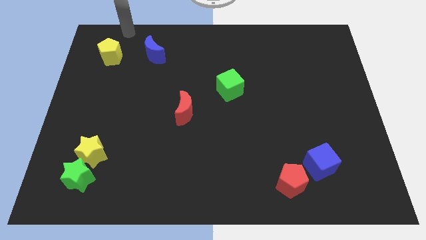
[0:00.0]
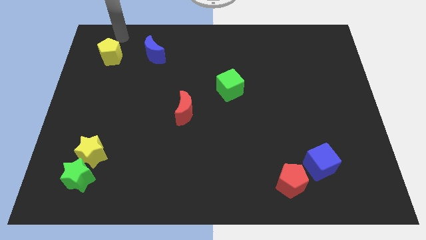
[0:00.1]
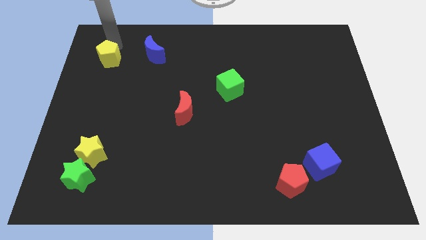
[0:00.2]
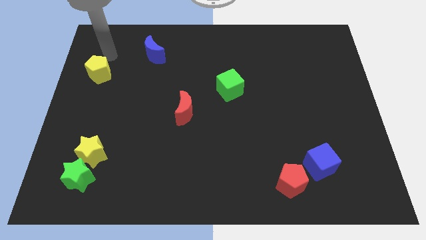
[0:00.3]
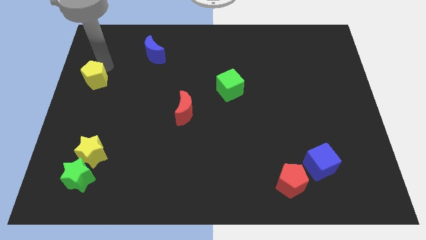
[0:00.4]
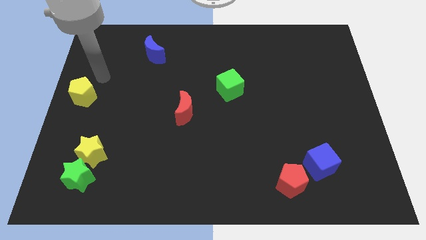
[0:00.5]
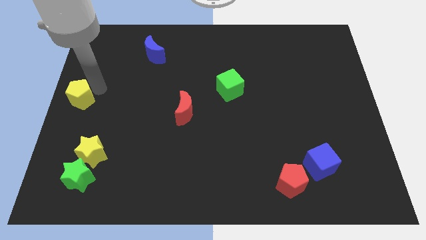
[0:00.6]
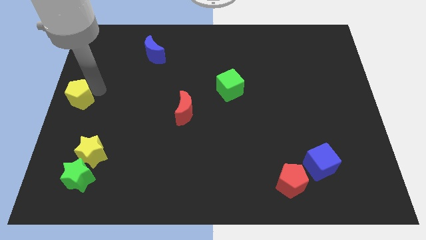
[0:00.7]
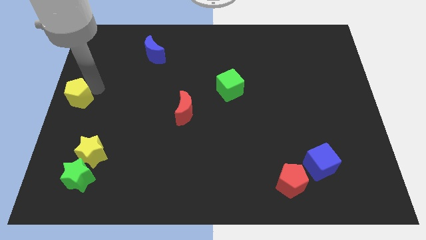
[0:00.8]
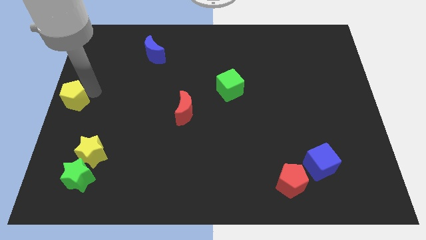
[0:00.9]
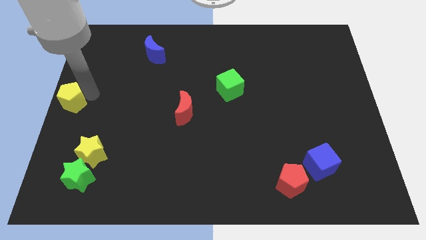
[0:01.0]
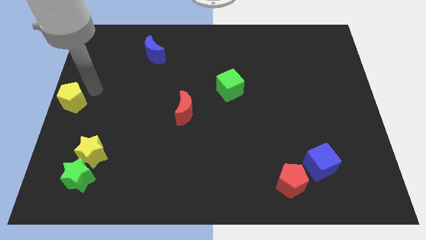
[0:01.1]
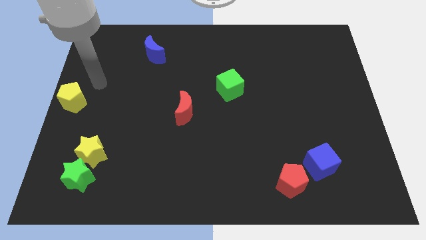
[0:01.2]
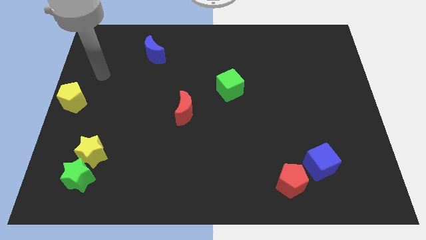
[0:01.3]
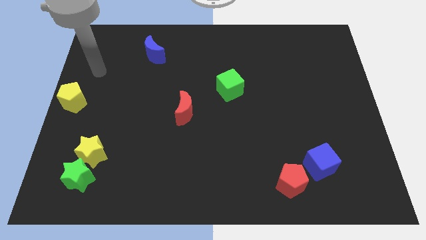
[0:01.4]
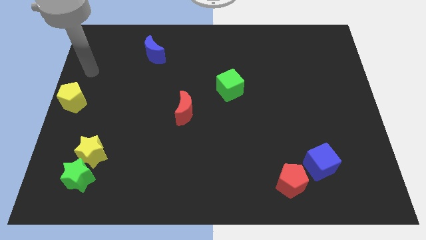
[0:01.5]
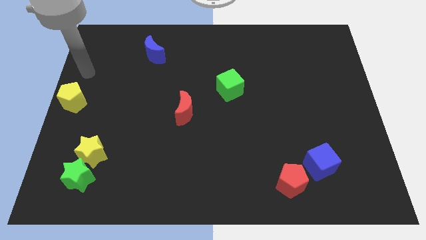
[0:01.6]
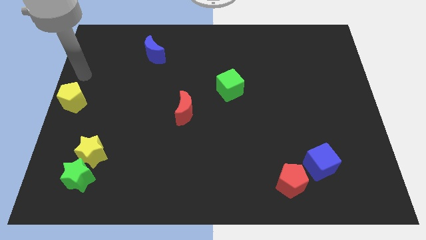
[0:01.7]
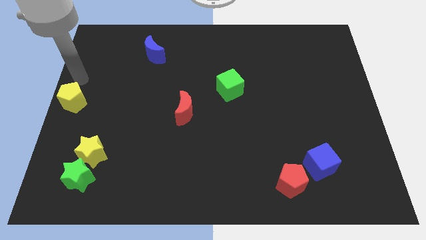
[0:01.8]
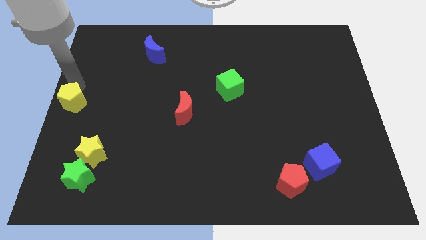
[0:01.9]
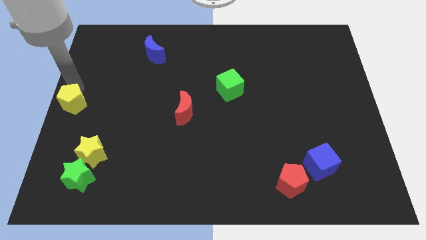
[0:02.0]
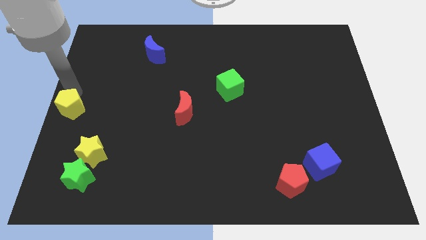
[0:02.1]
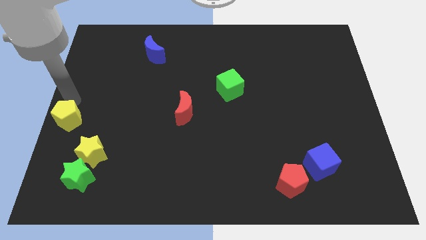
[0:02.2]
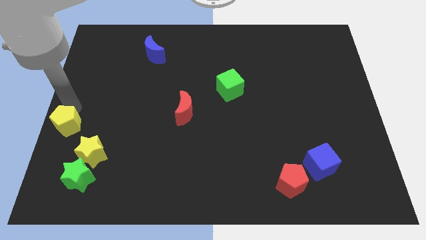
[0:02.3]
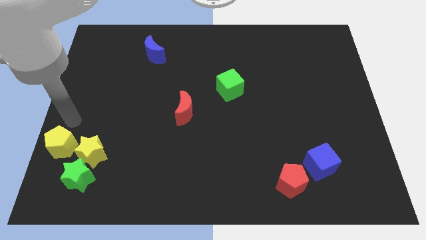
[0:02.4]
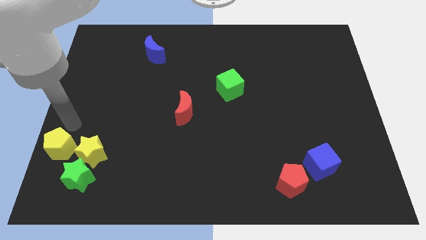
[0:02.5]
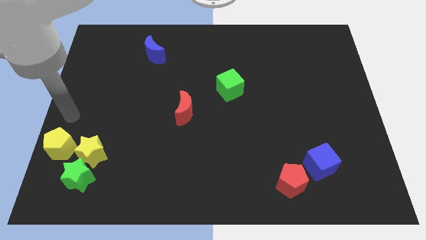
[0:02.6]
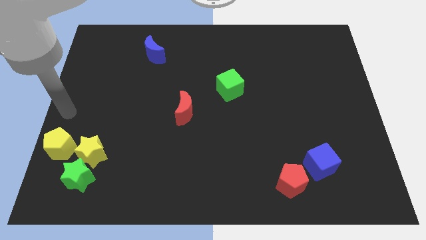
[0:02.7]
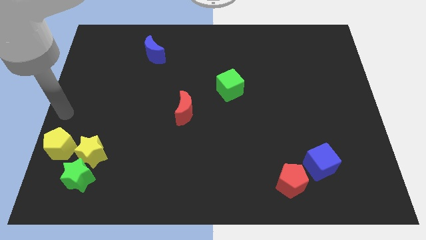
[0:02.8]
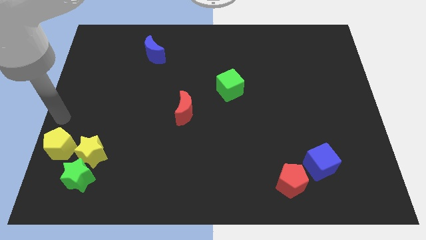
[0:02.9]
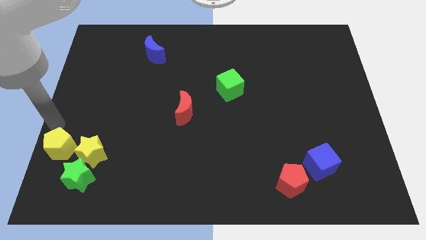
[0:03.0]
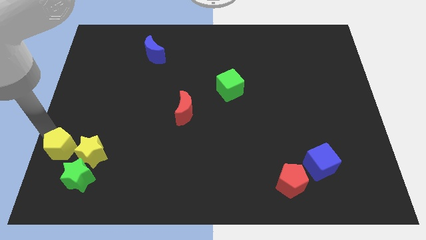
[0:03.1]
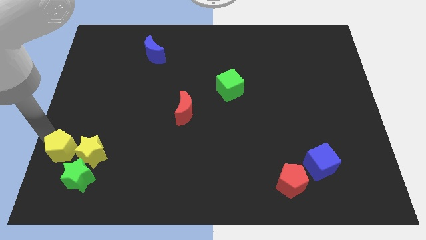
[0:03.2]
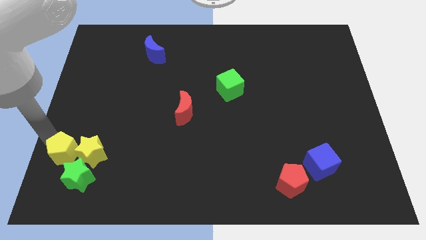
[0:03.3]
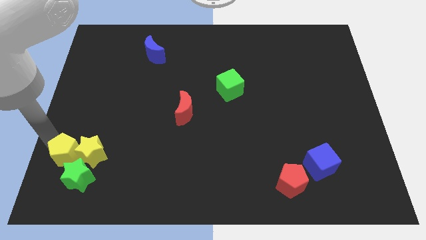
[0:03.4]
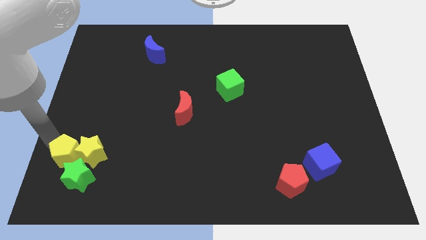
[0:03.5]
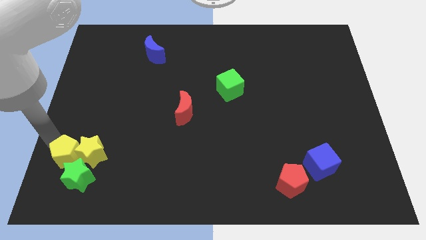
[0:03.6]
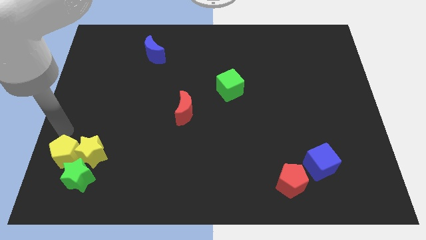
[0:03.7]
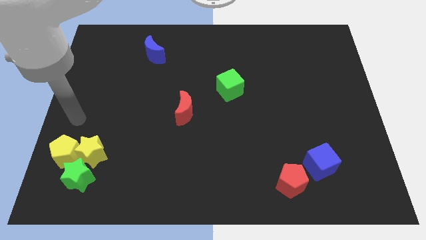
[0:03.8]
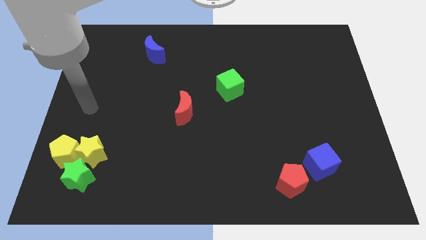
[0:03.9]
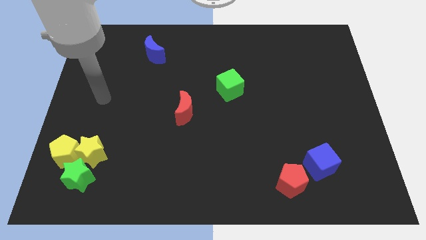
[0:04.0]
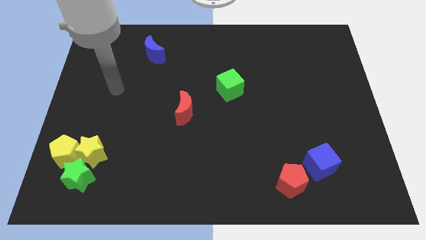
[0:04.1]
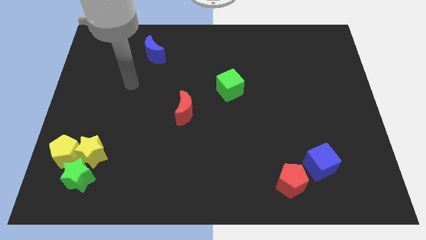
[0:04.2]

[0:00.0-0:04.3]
place the yellow pentagon left to the yellow star

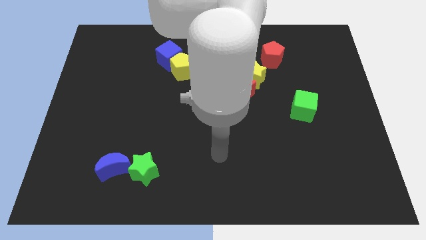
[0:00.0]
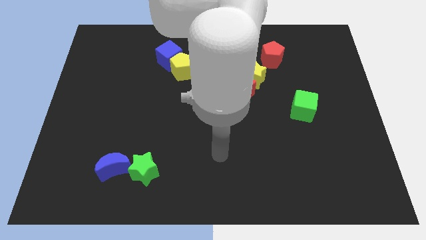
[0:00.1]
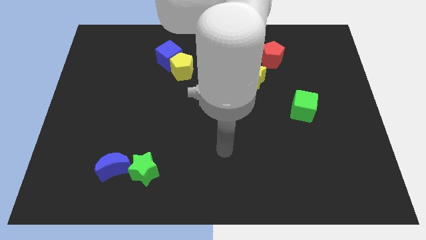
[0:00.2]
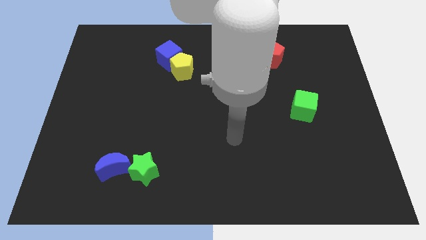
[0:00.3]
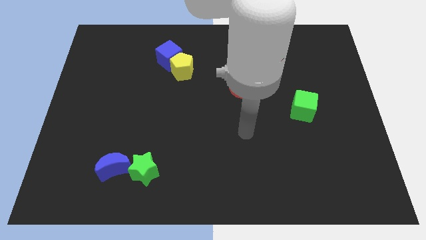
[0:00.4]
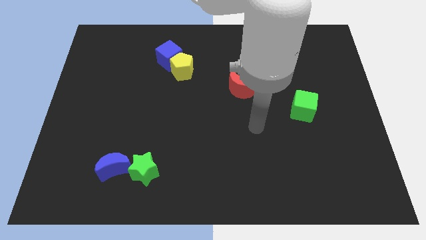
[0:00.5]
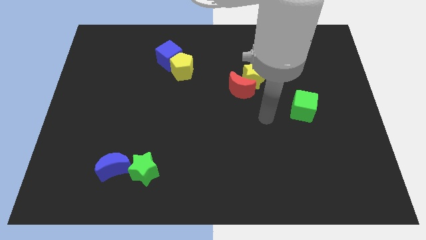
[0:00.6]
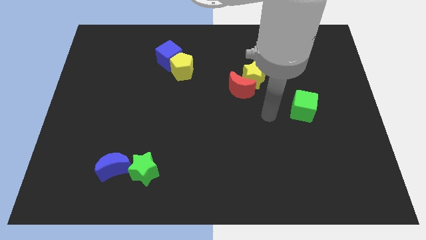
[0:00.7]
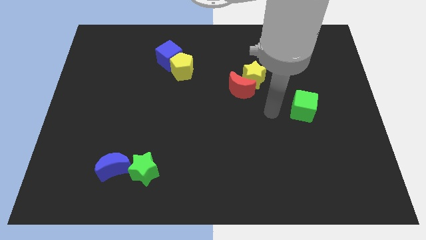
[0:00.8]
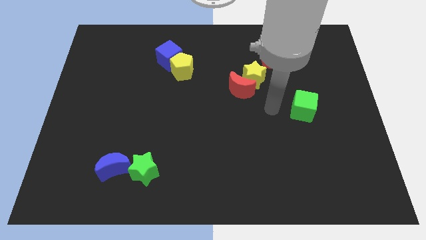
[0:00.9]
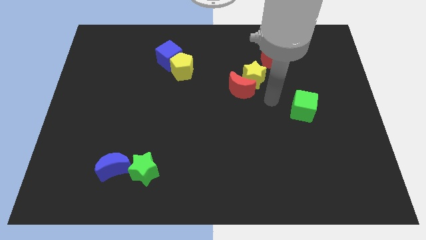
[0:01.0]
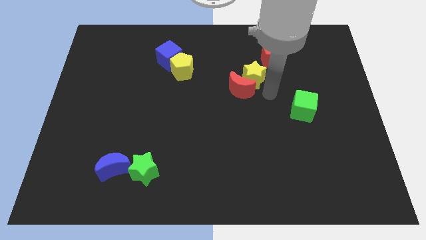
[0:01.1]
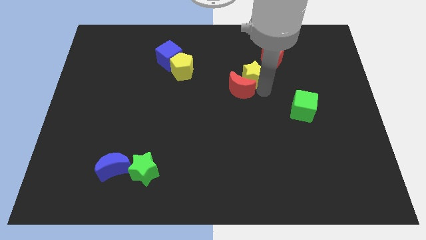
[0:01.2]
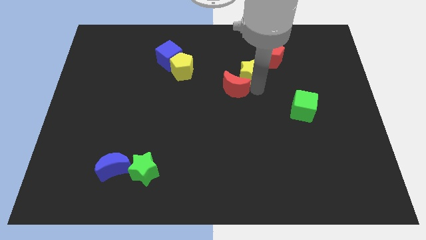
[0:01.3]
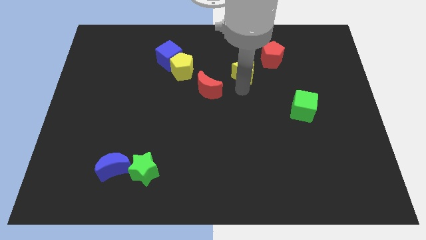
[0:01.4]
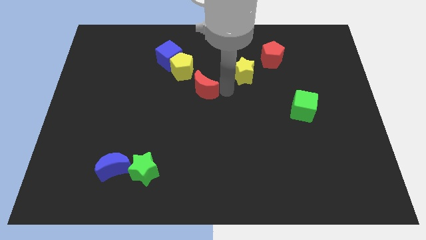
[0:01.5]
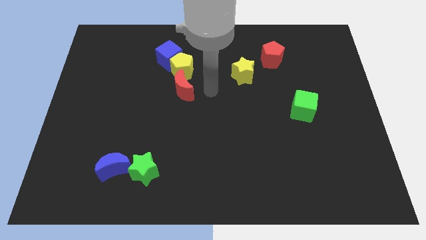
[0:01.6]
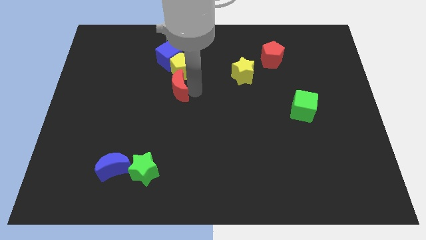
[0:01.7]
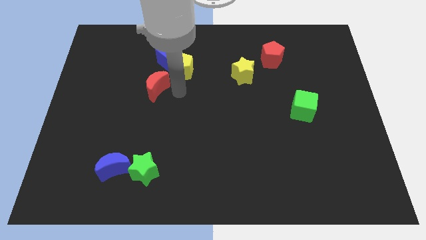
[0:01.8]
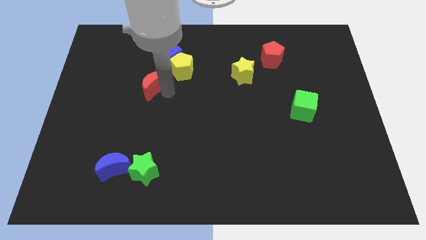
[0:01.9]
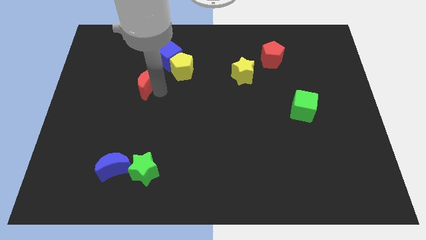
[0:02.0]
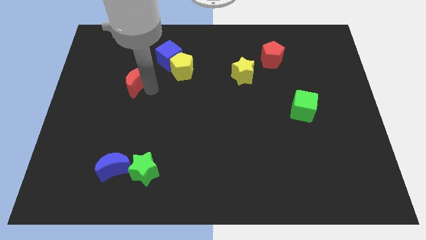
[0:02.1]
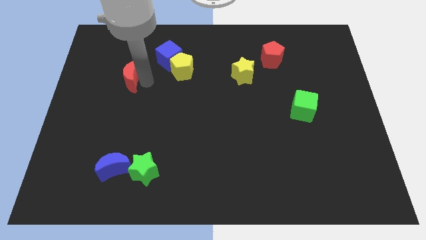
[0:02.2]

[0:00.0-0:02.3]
place the red crescent diagonal to the blue cube

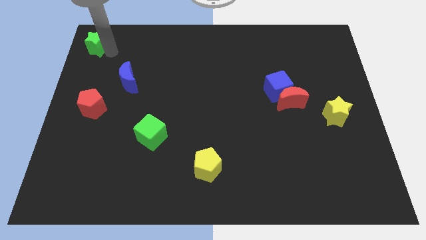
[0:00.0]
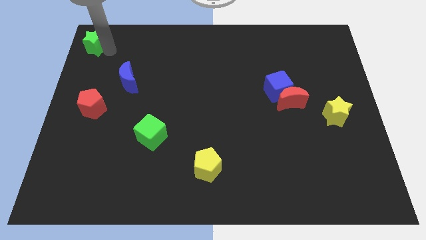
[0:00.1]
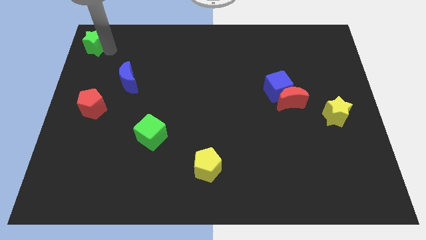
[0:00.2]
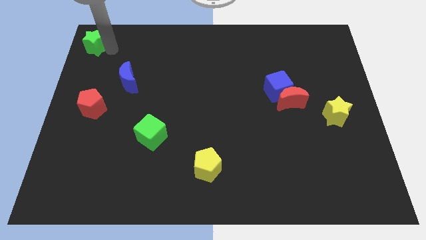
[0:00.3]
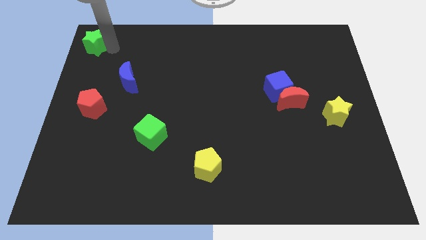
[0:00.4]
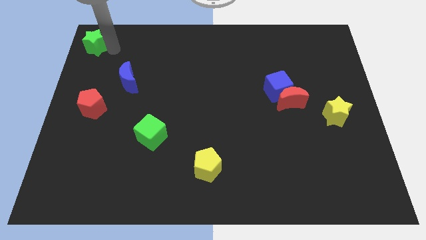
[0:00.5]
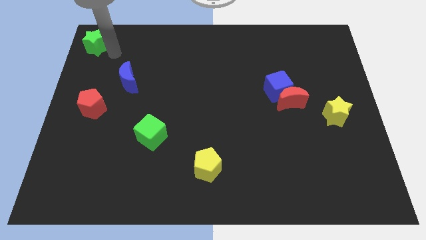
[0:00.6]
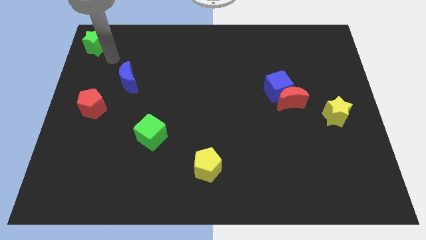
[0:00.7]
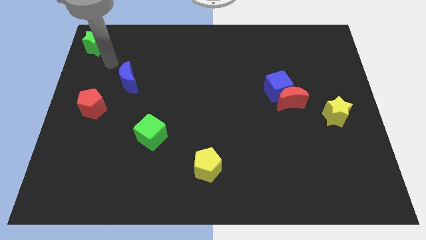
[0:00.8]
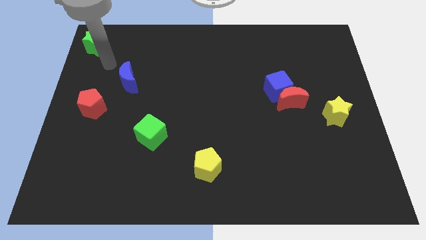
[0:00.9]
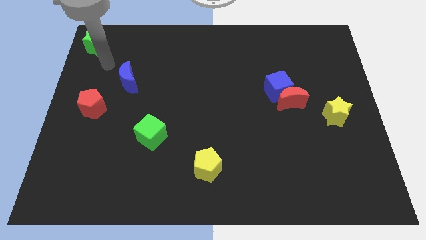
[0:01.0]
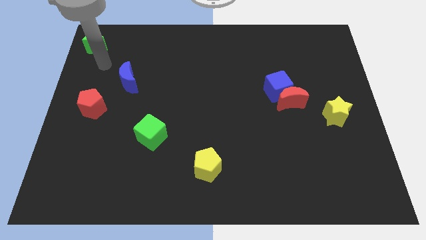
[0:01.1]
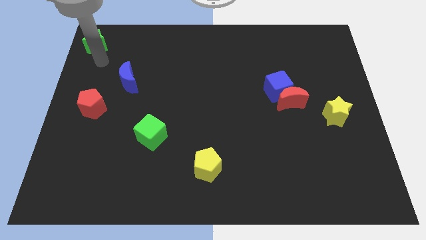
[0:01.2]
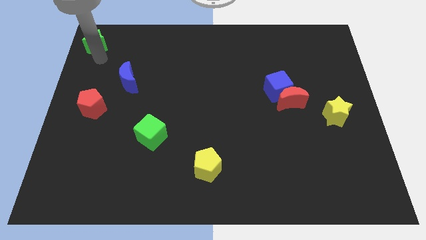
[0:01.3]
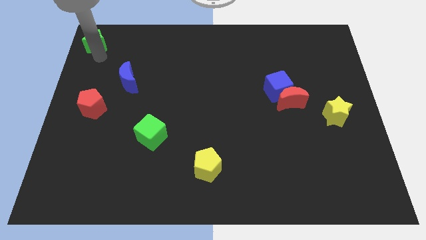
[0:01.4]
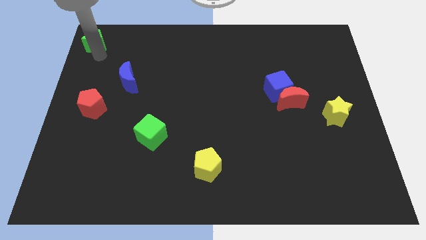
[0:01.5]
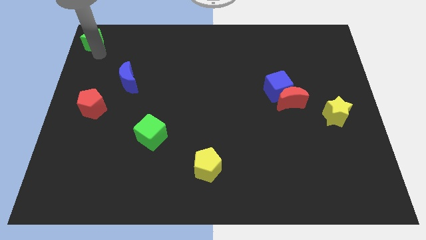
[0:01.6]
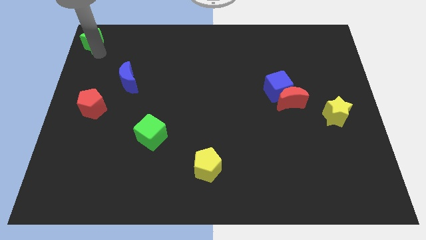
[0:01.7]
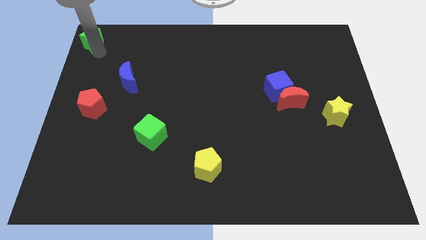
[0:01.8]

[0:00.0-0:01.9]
push green star to the top left corner of the board

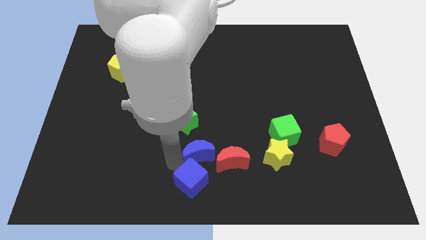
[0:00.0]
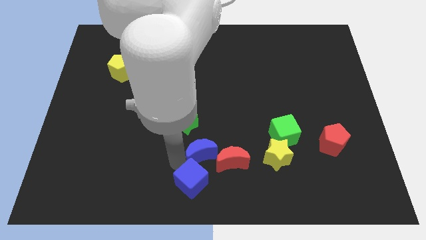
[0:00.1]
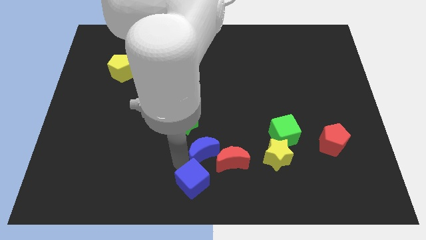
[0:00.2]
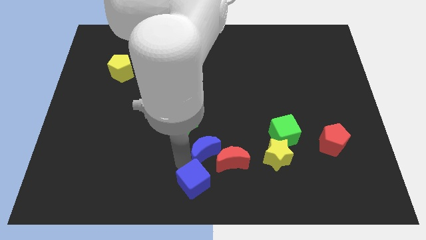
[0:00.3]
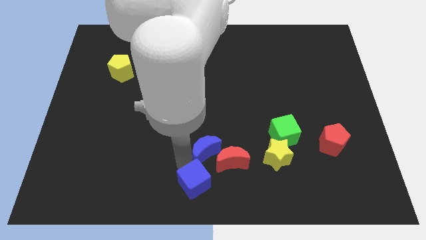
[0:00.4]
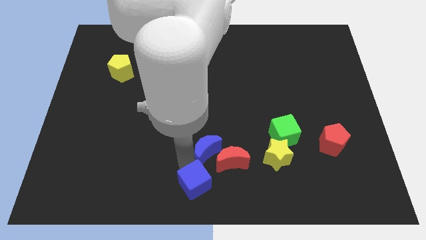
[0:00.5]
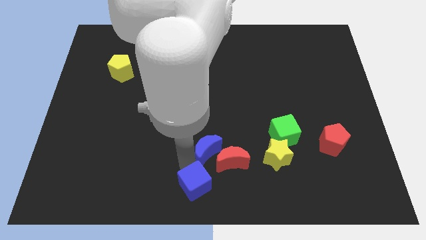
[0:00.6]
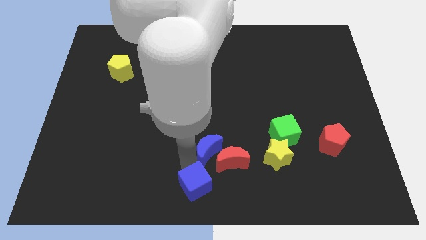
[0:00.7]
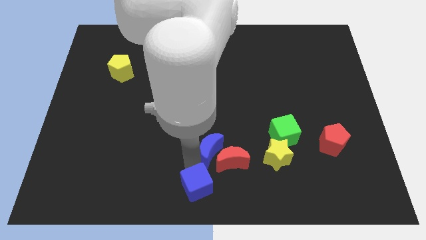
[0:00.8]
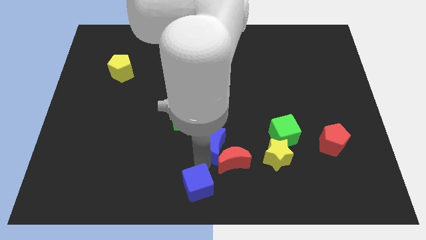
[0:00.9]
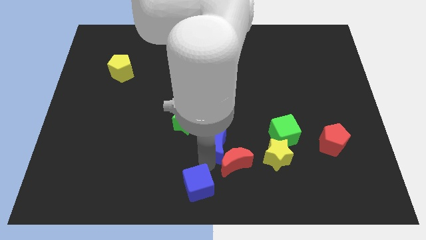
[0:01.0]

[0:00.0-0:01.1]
place your hand in between blue blocks
